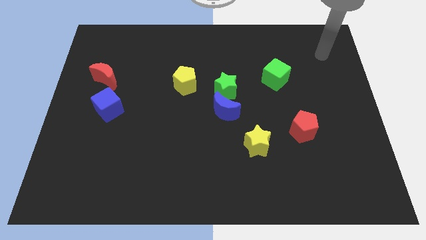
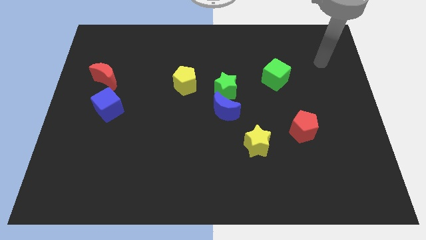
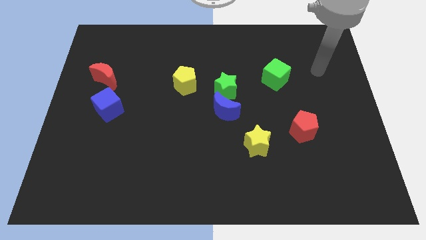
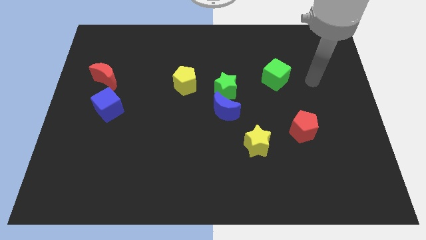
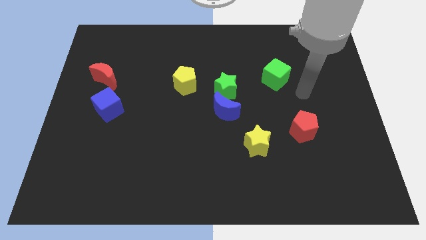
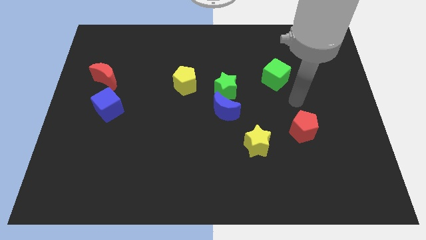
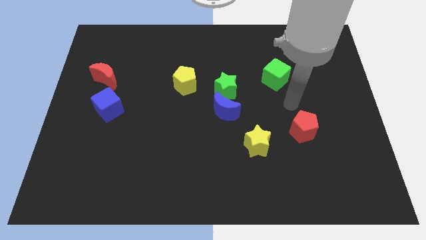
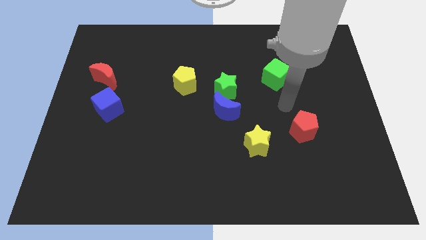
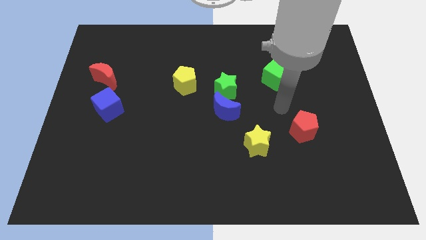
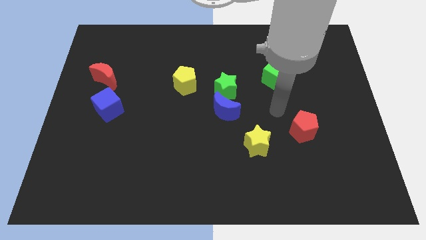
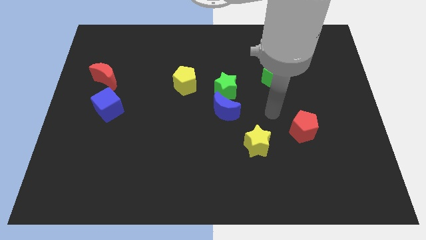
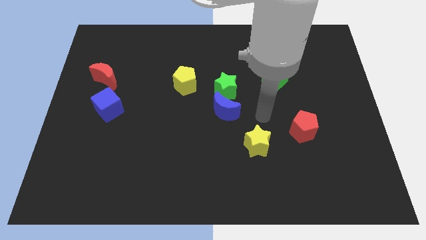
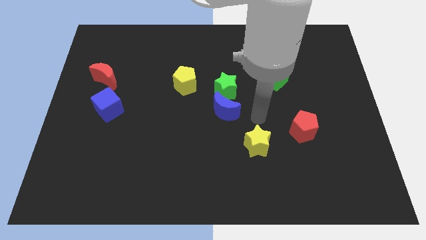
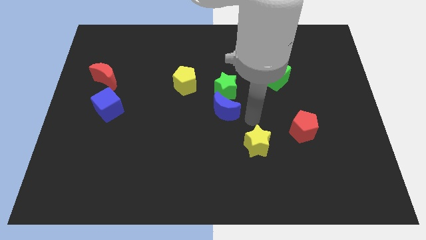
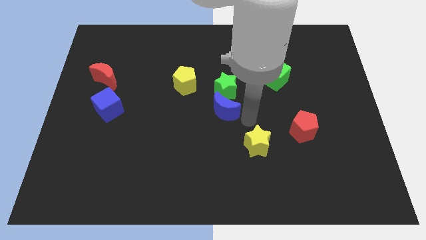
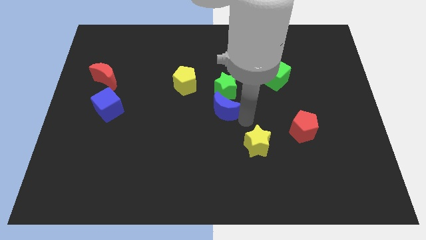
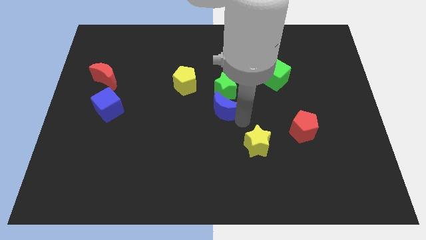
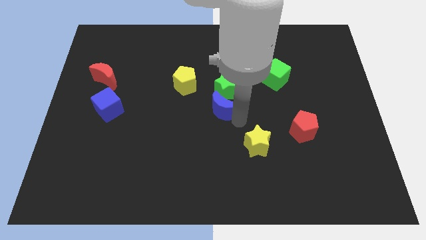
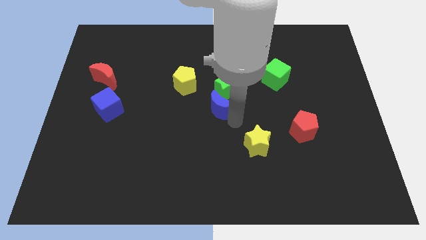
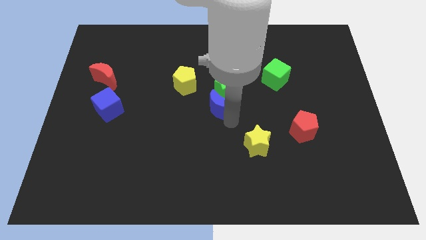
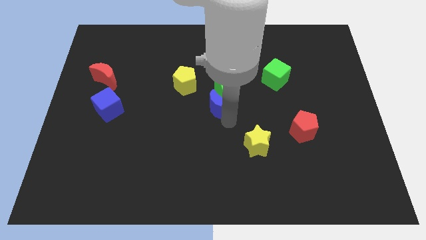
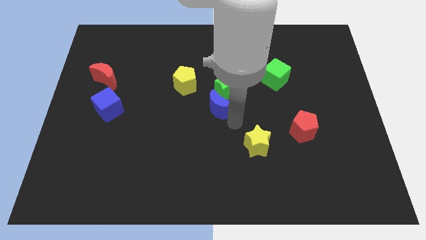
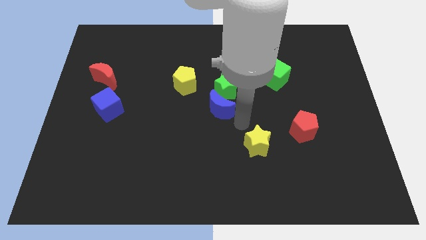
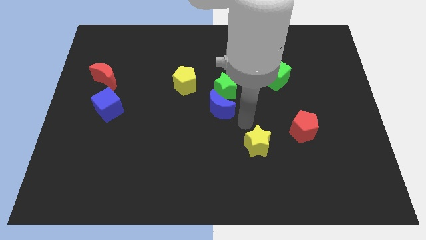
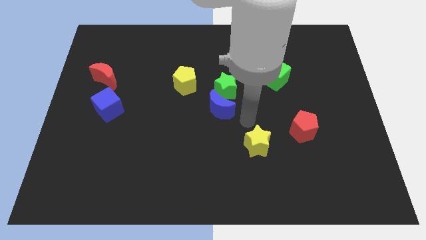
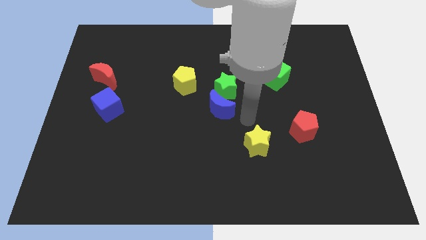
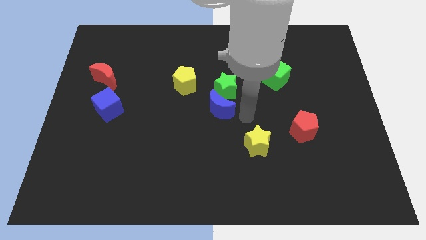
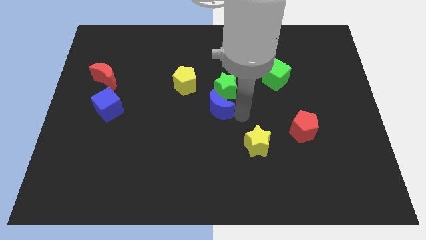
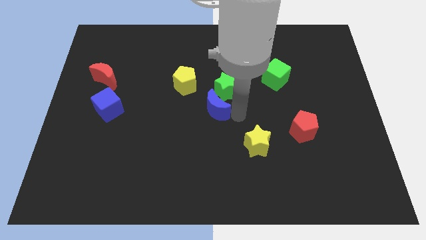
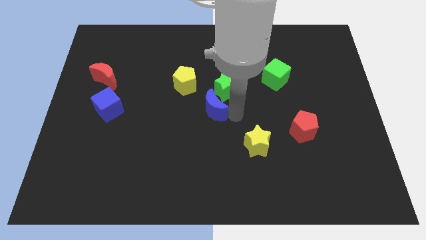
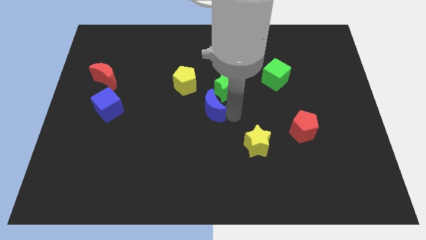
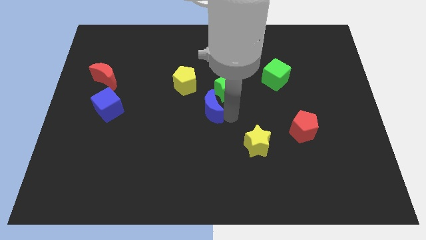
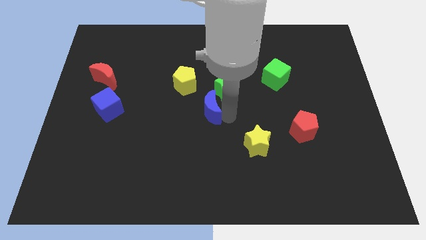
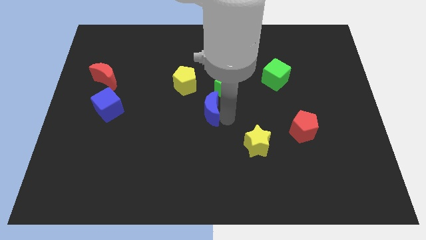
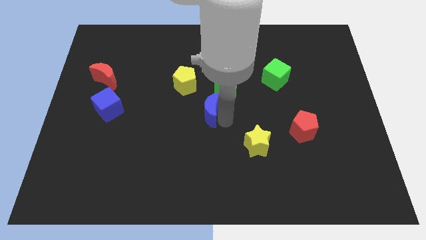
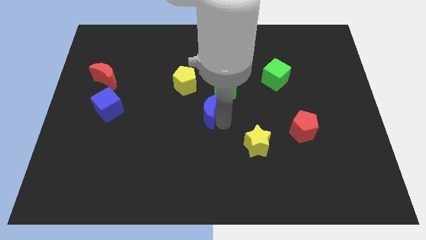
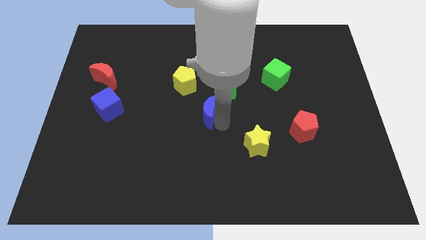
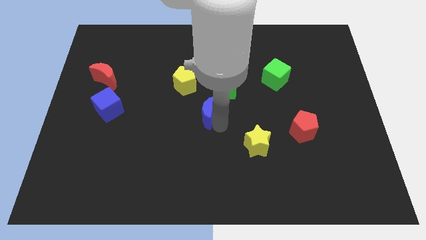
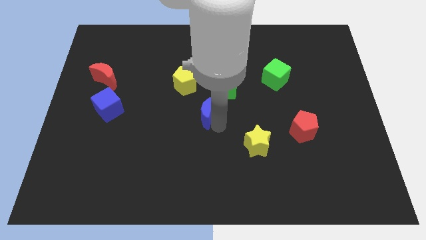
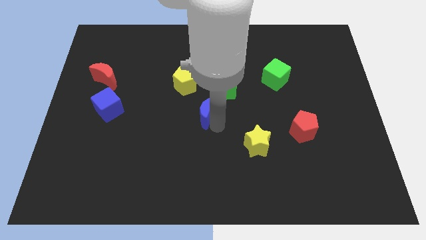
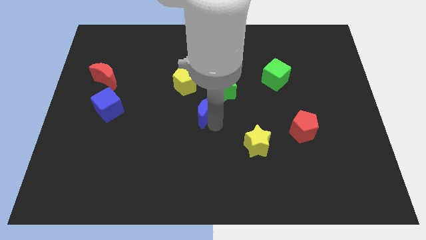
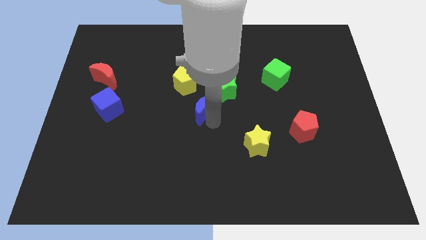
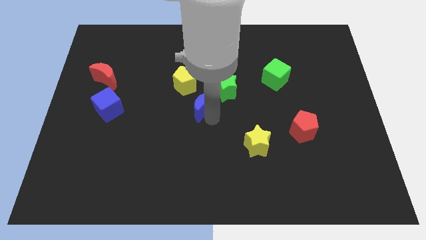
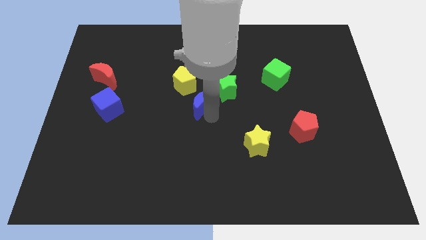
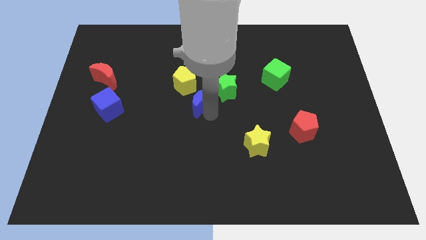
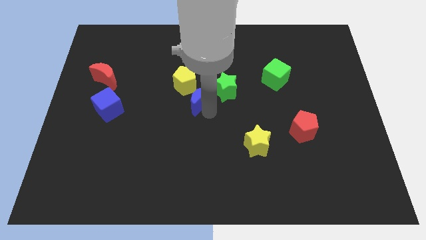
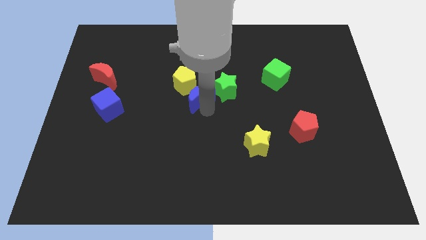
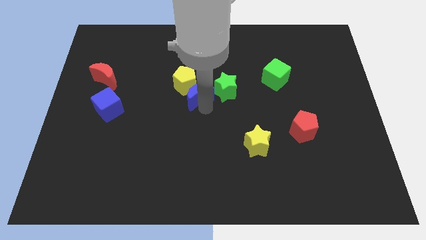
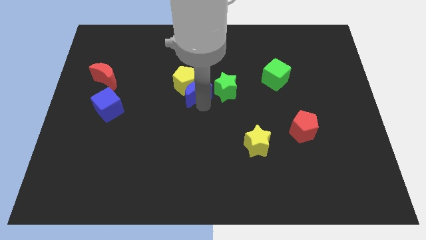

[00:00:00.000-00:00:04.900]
slide the blue moon next to the yellow pentagon

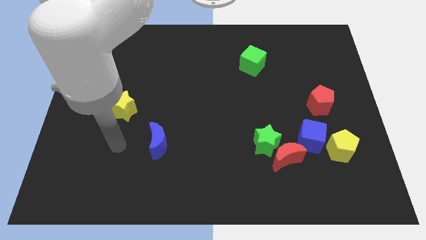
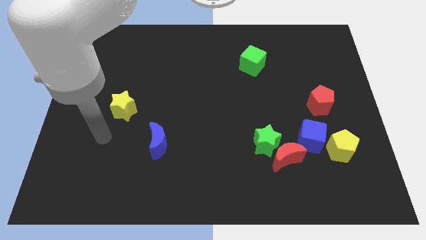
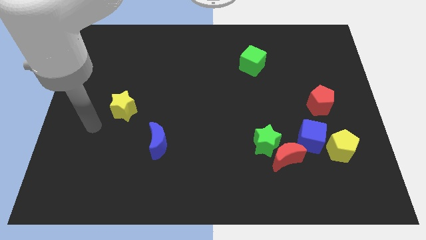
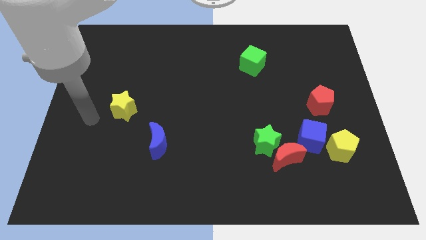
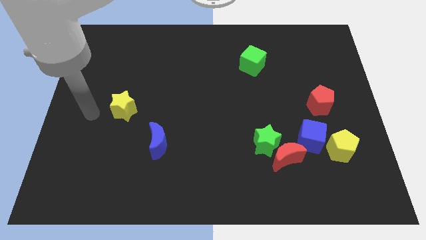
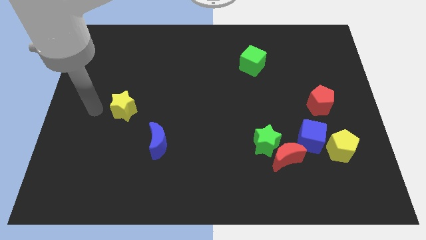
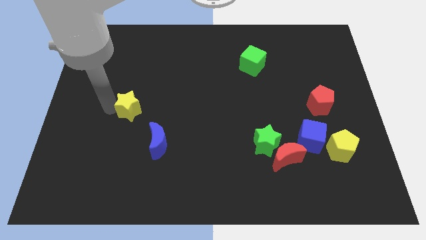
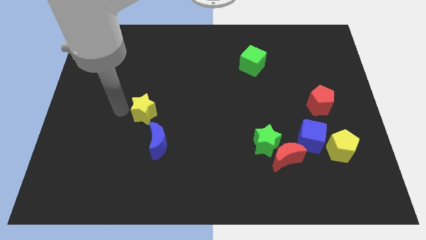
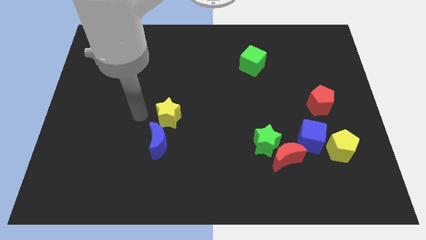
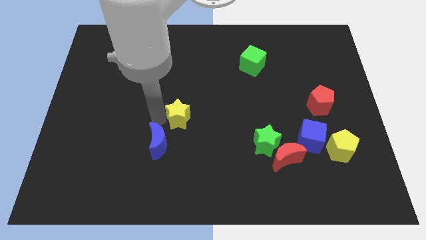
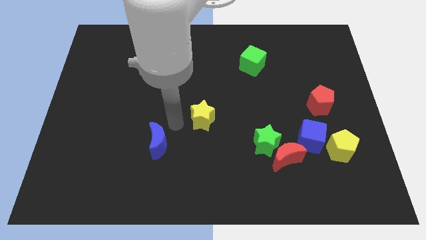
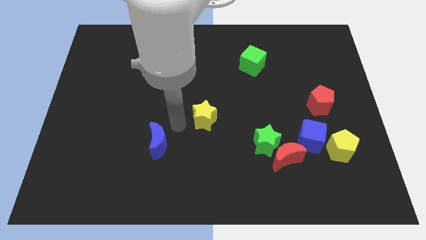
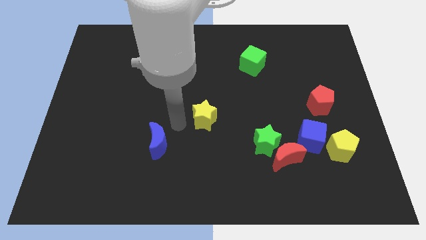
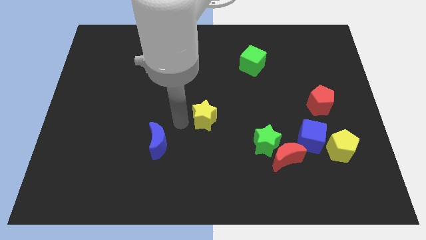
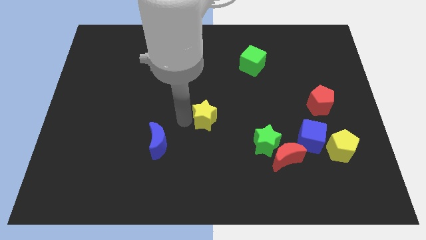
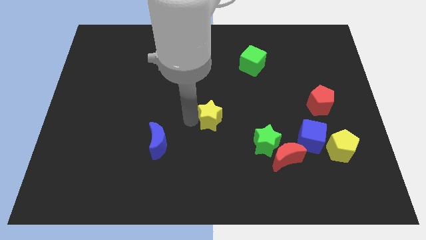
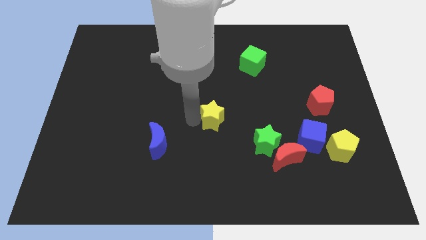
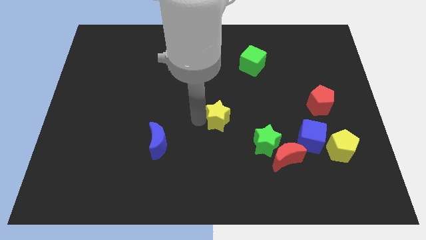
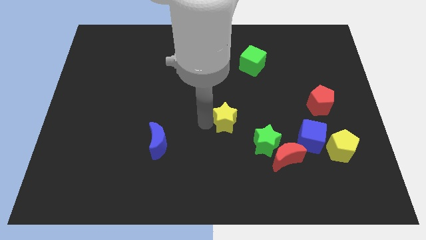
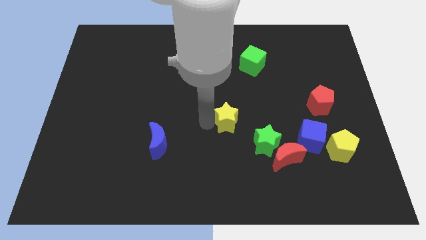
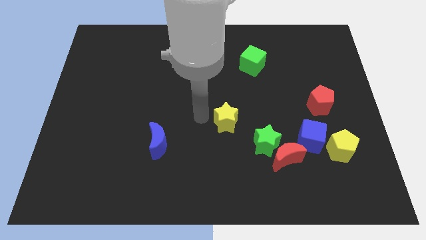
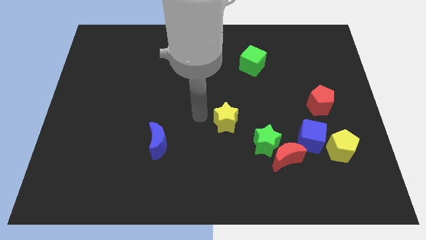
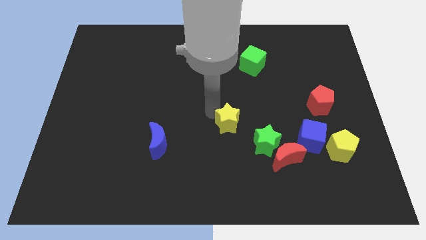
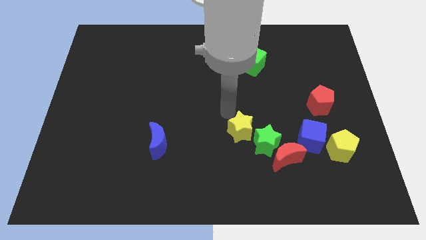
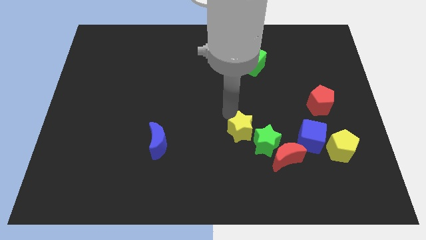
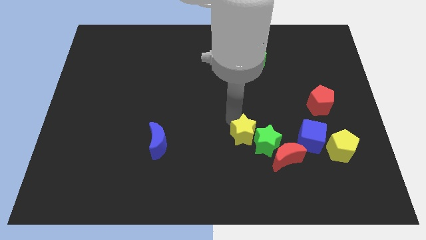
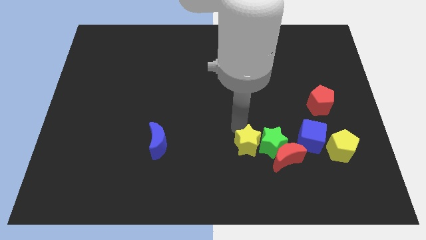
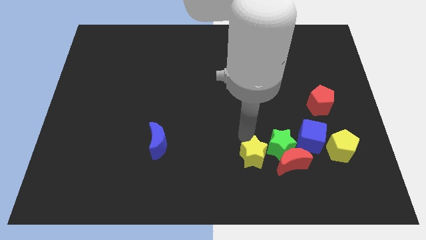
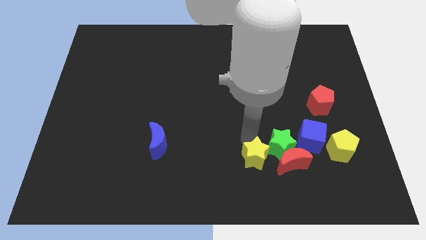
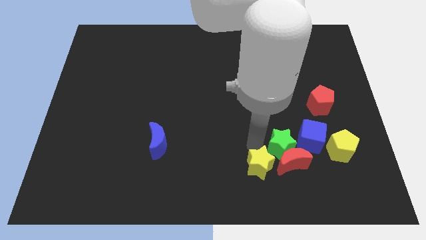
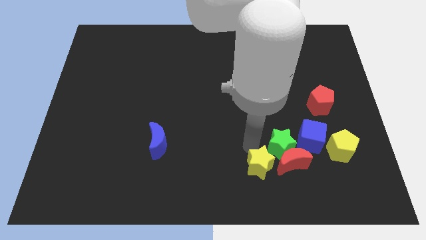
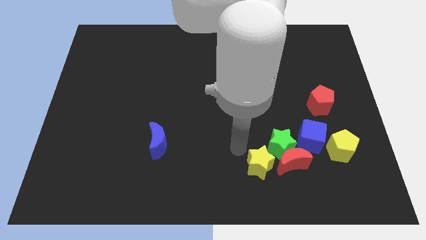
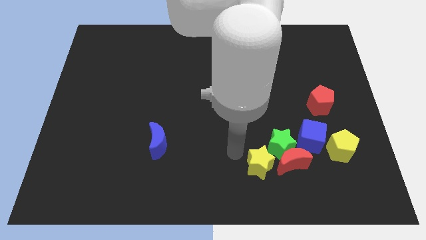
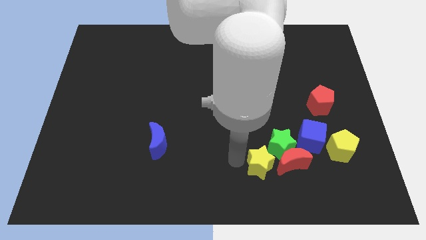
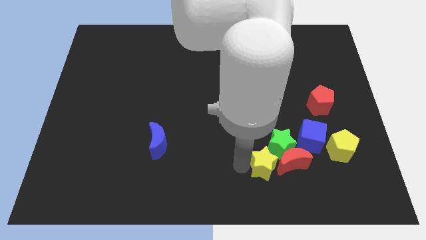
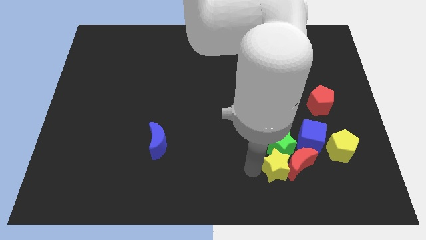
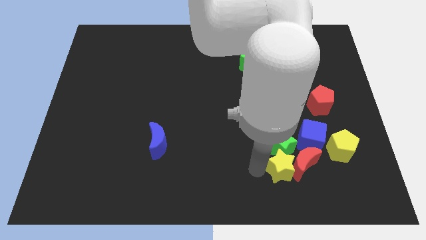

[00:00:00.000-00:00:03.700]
push the yellow star towards the red moon
